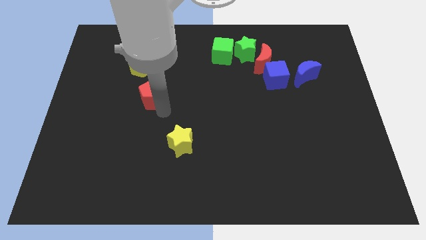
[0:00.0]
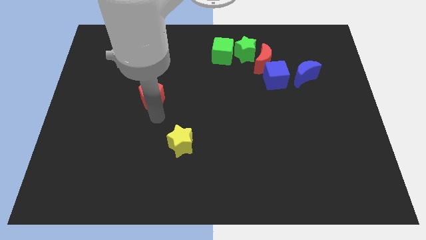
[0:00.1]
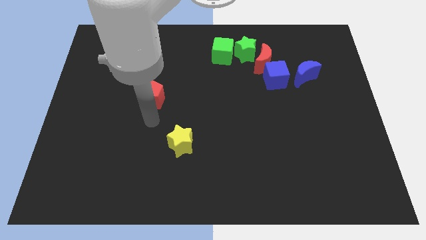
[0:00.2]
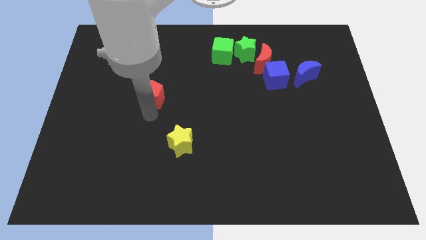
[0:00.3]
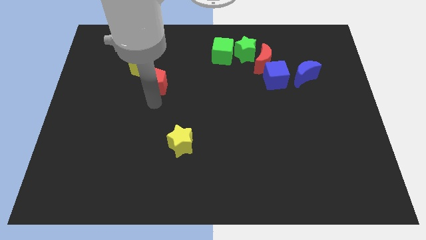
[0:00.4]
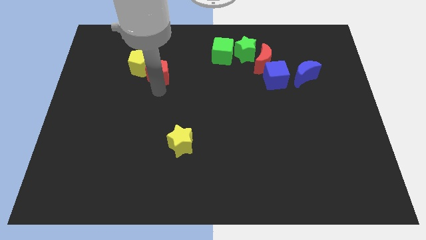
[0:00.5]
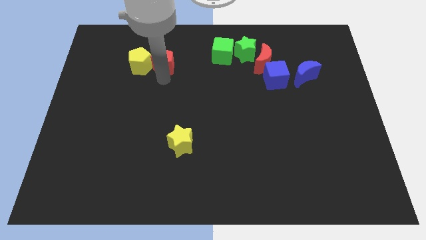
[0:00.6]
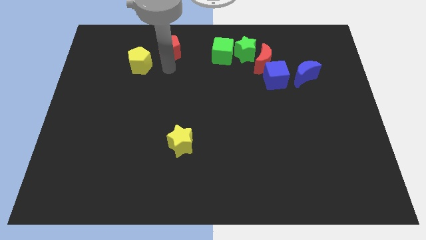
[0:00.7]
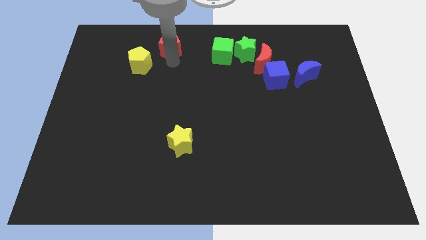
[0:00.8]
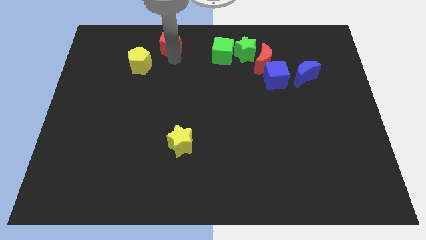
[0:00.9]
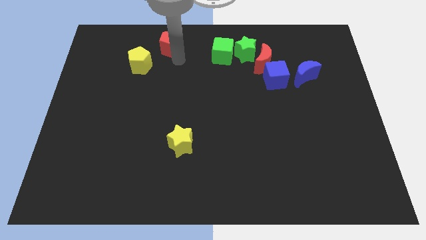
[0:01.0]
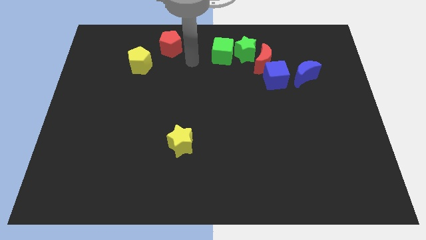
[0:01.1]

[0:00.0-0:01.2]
place the red pentagon diagonally top right to yellow pentagon

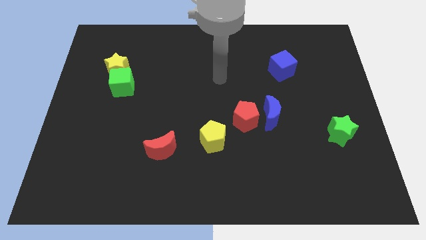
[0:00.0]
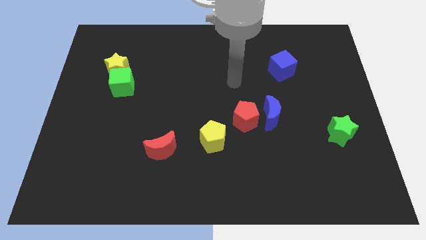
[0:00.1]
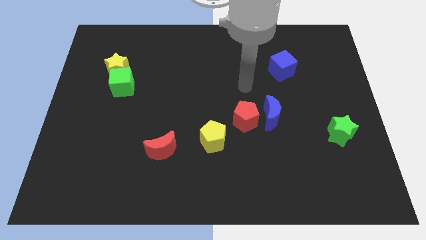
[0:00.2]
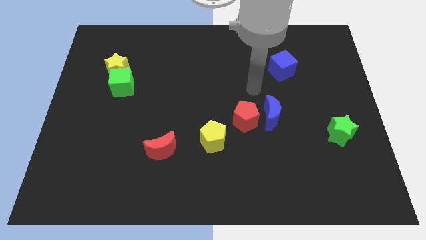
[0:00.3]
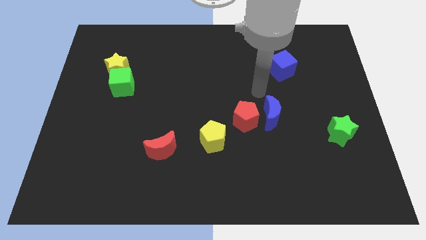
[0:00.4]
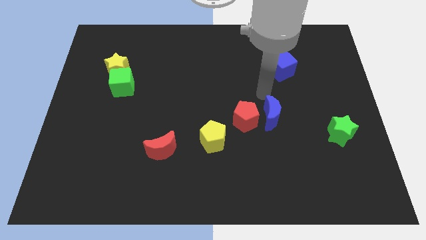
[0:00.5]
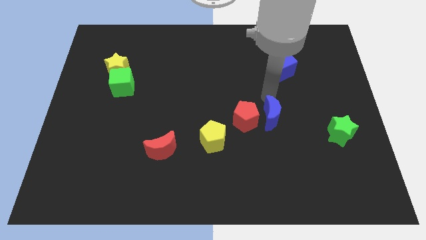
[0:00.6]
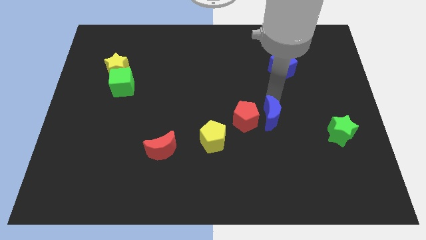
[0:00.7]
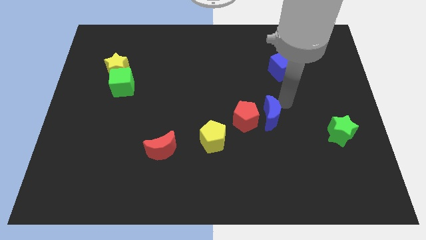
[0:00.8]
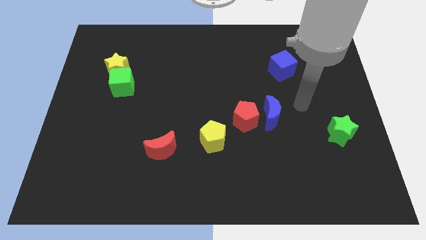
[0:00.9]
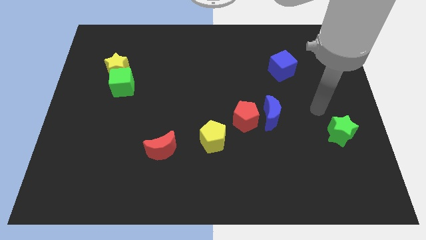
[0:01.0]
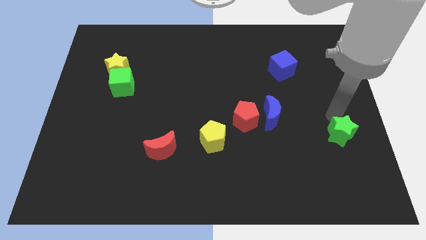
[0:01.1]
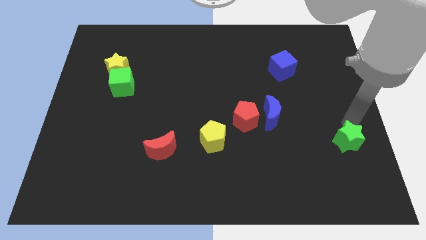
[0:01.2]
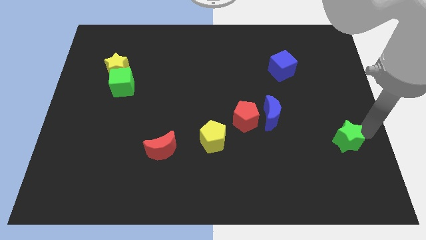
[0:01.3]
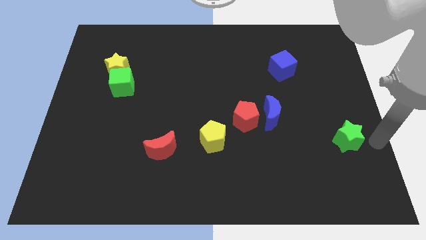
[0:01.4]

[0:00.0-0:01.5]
place your hand parallel right to the green star

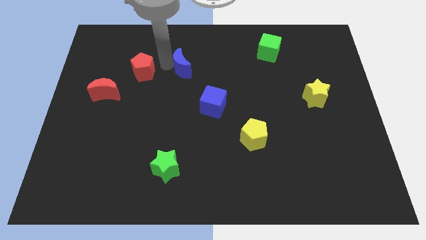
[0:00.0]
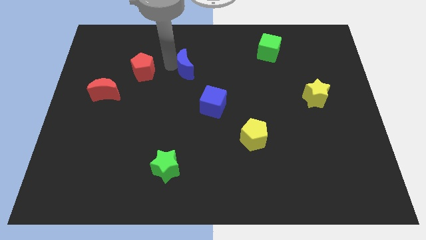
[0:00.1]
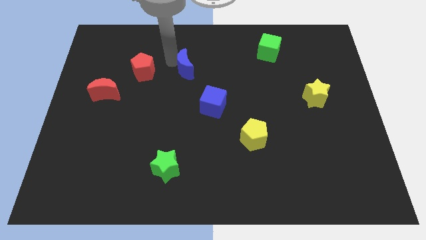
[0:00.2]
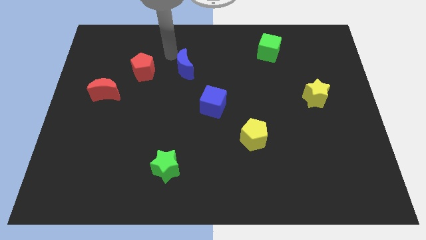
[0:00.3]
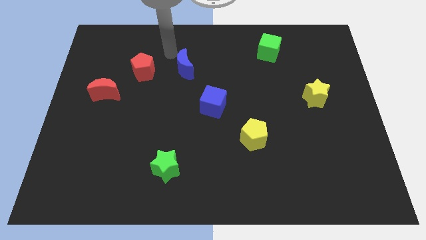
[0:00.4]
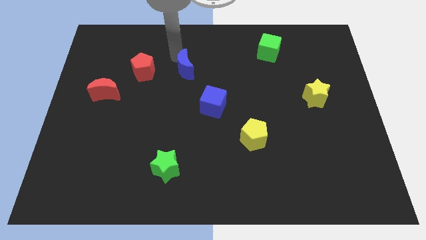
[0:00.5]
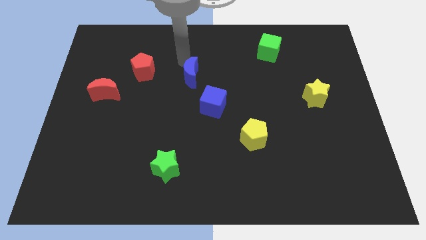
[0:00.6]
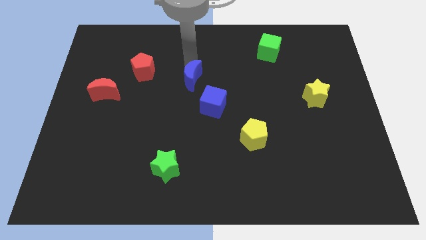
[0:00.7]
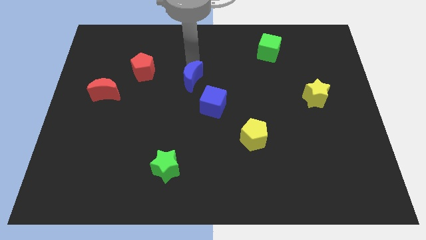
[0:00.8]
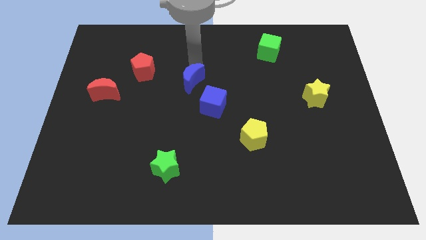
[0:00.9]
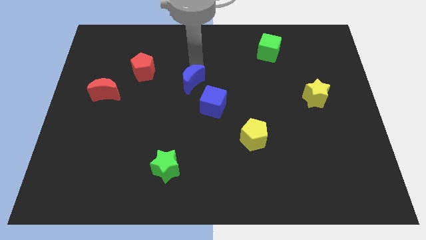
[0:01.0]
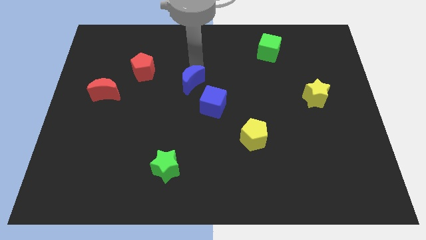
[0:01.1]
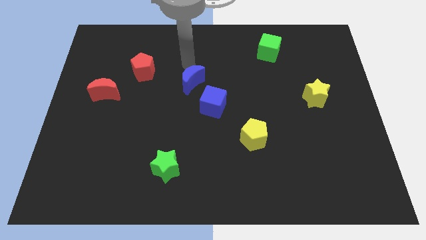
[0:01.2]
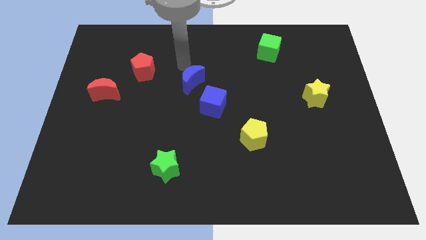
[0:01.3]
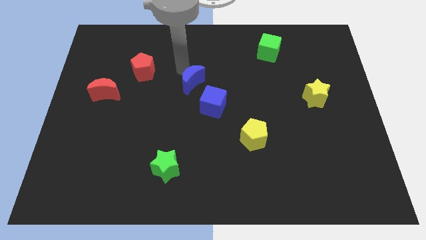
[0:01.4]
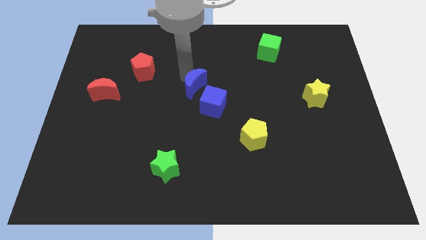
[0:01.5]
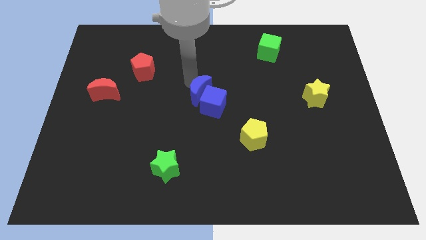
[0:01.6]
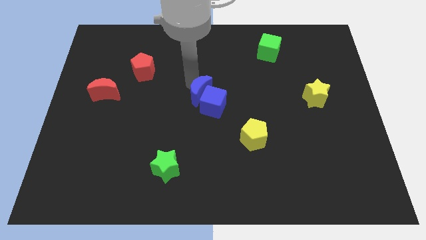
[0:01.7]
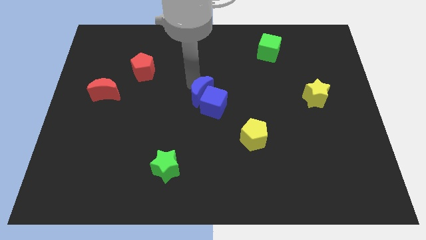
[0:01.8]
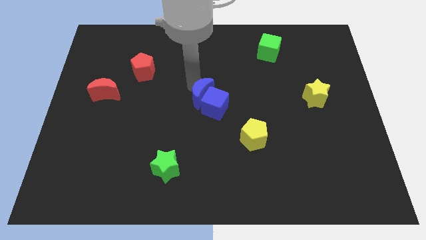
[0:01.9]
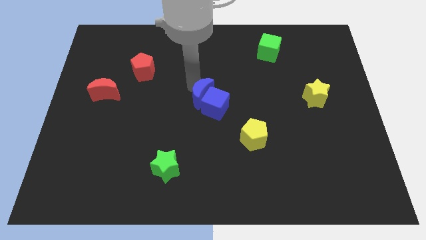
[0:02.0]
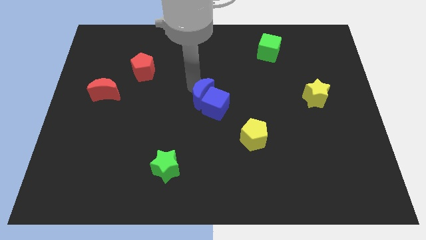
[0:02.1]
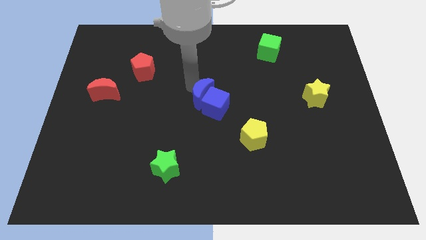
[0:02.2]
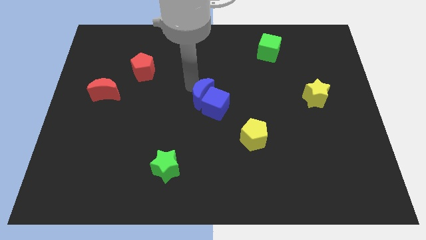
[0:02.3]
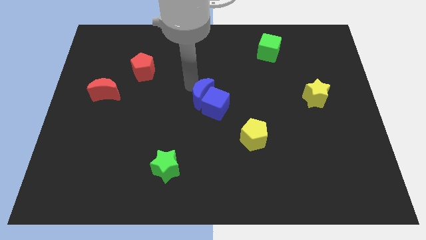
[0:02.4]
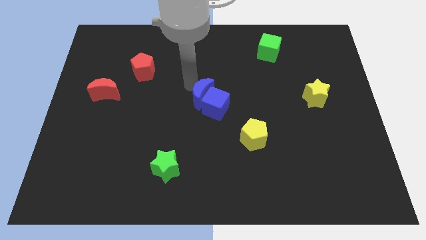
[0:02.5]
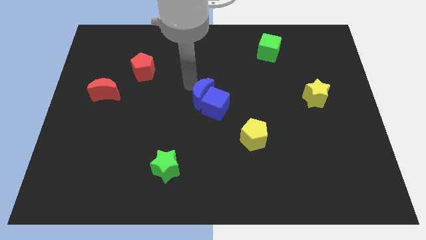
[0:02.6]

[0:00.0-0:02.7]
place the blue blocks diagonally to yellow pentagon

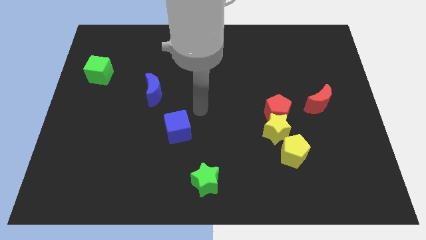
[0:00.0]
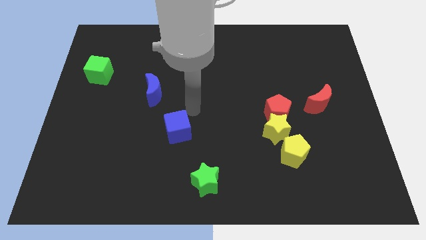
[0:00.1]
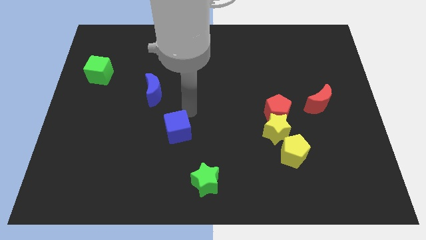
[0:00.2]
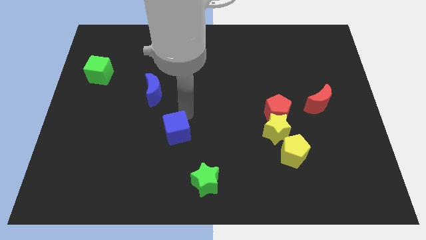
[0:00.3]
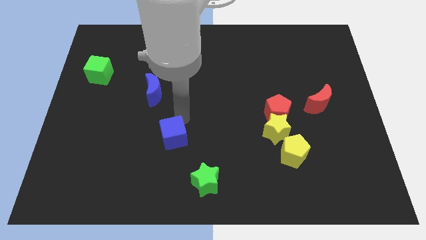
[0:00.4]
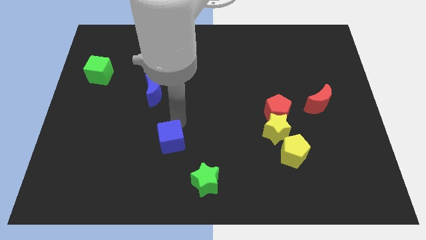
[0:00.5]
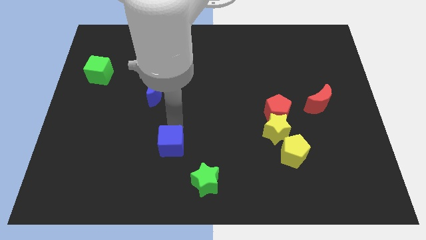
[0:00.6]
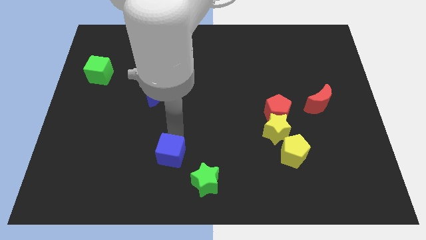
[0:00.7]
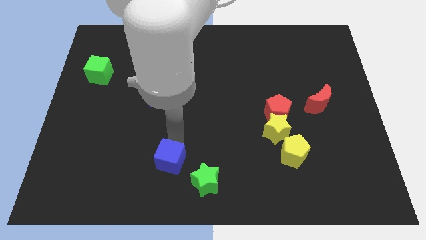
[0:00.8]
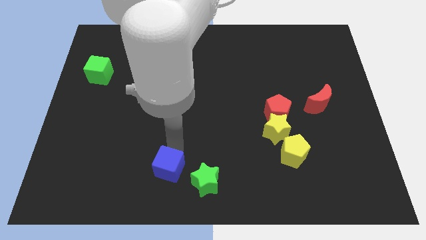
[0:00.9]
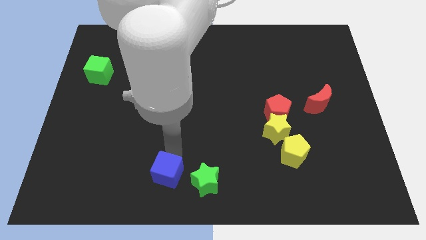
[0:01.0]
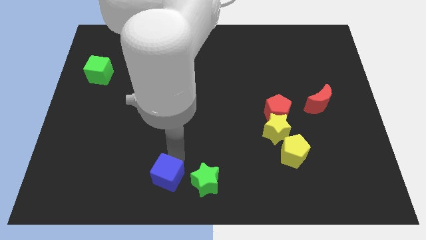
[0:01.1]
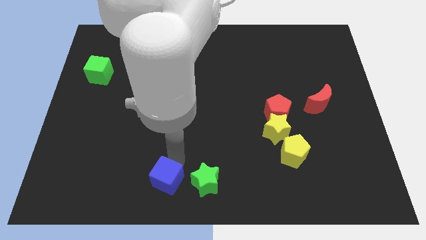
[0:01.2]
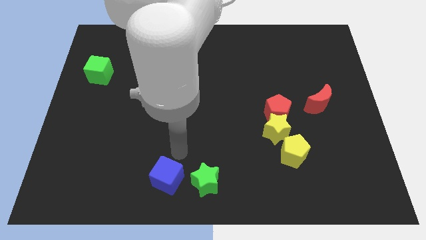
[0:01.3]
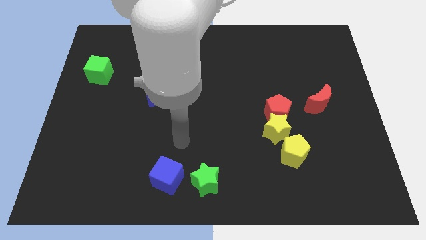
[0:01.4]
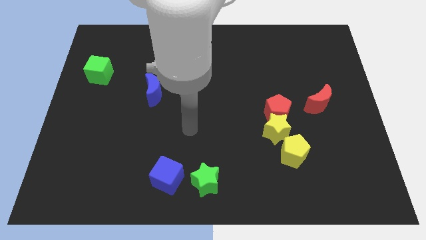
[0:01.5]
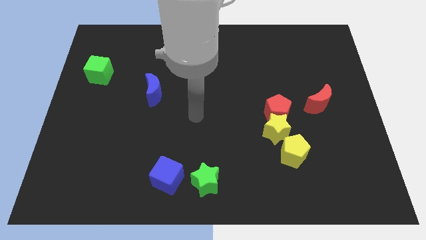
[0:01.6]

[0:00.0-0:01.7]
put the blue cube to the left side of the green star

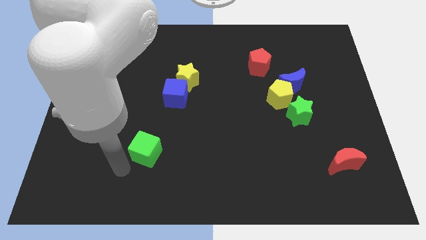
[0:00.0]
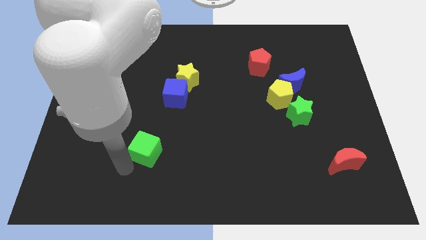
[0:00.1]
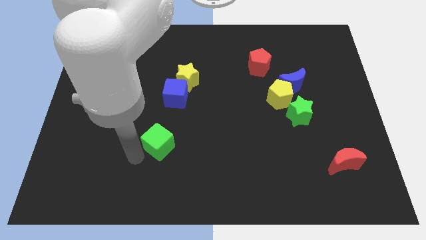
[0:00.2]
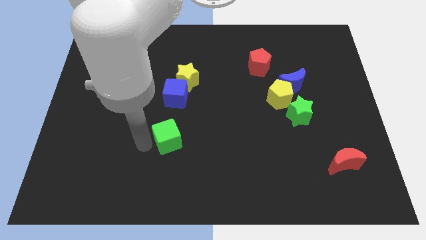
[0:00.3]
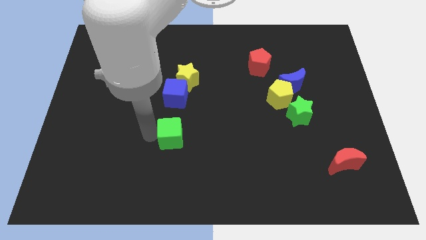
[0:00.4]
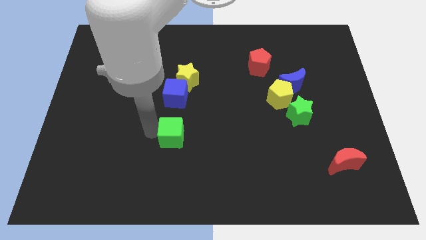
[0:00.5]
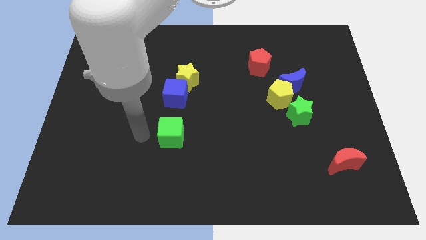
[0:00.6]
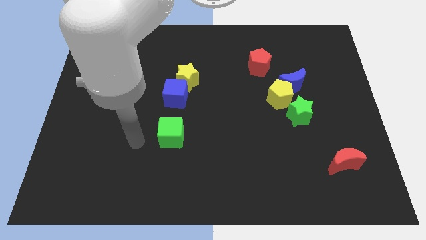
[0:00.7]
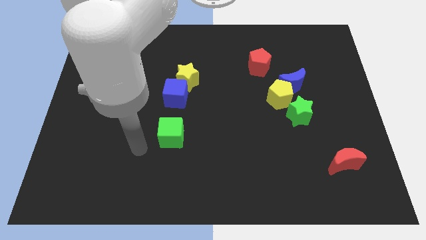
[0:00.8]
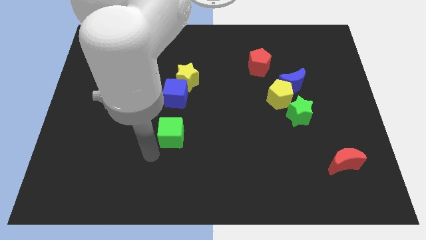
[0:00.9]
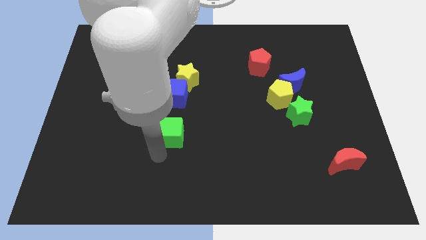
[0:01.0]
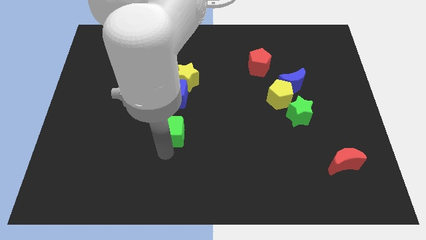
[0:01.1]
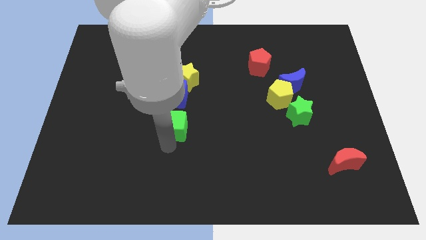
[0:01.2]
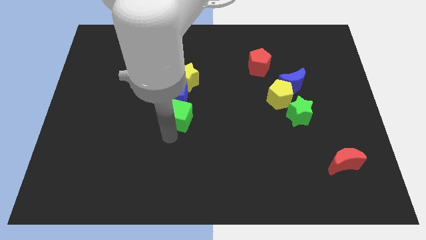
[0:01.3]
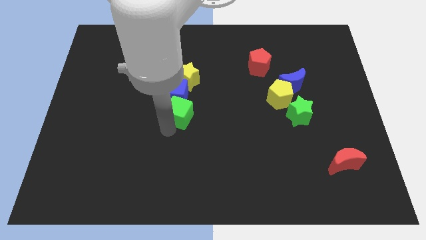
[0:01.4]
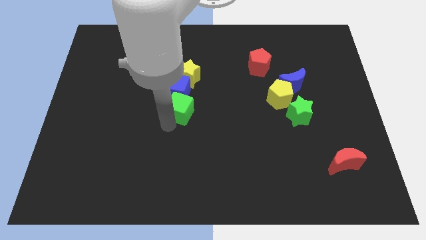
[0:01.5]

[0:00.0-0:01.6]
drag green cube to the bottom of blue cube

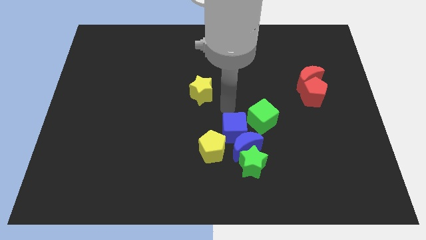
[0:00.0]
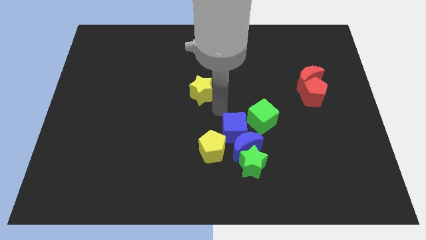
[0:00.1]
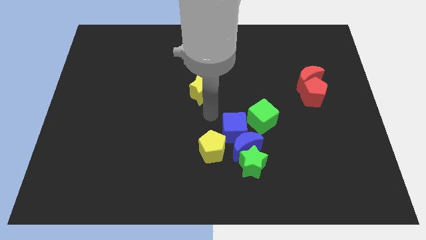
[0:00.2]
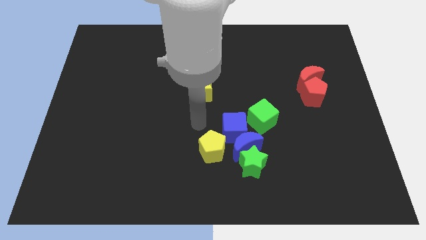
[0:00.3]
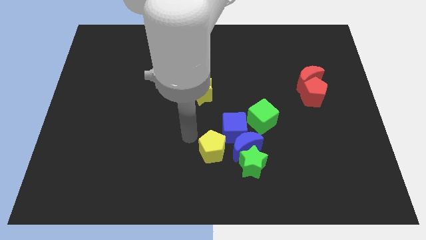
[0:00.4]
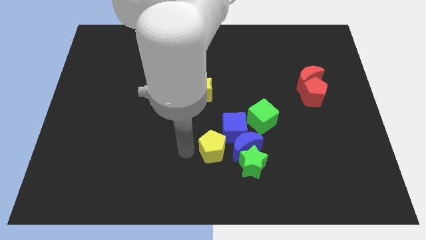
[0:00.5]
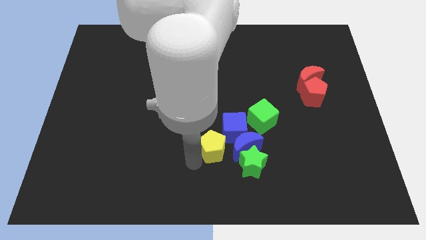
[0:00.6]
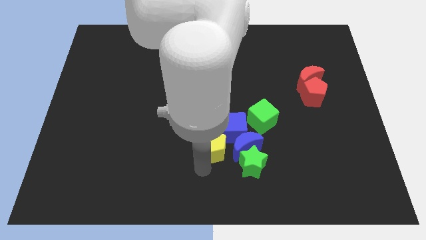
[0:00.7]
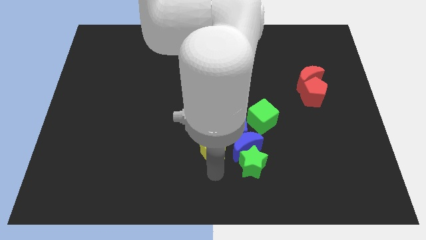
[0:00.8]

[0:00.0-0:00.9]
point your arm at the bottom of the yellow pentagon
